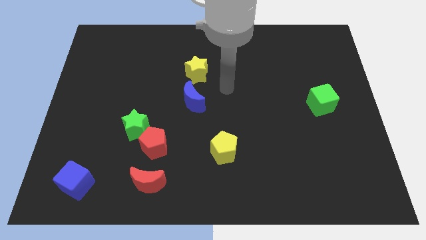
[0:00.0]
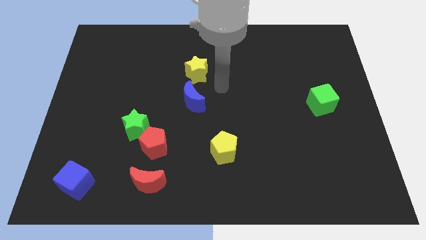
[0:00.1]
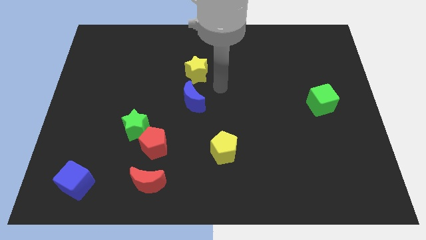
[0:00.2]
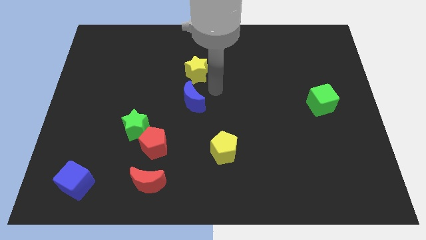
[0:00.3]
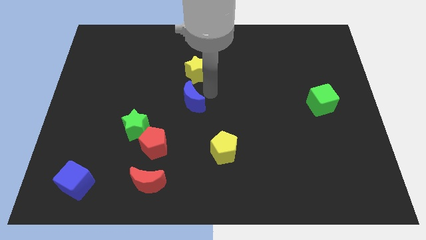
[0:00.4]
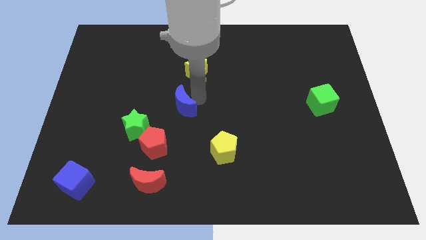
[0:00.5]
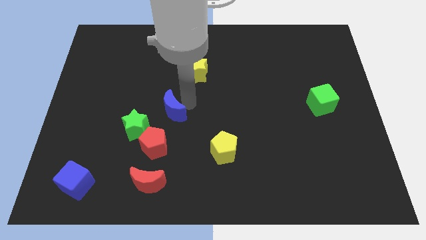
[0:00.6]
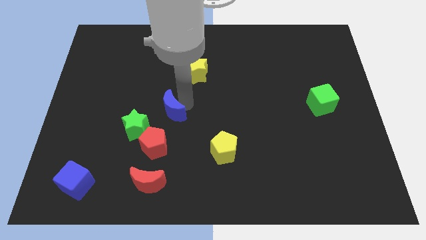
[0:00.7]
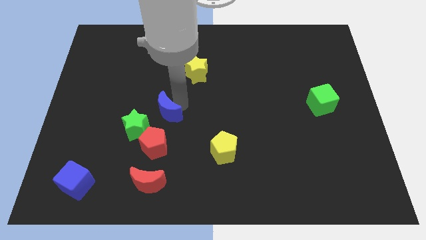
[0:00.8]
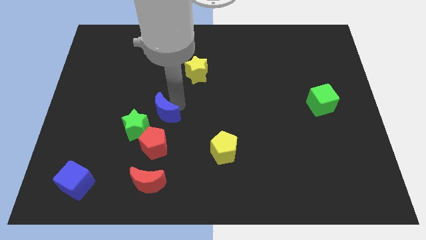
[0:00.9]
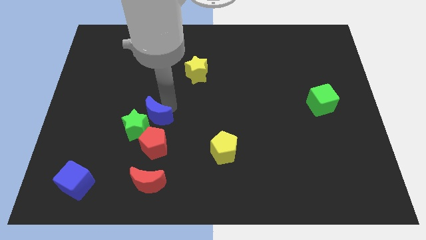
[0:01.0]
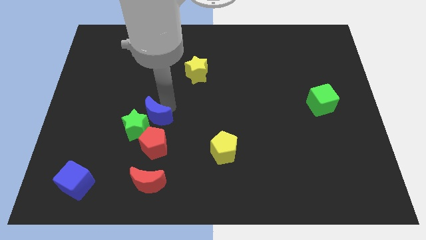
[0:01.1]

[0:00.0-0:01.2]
push the blue moon away from the yellow star

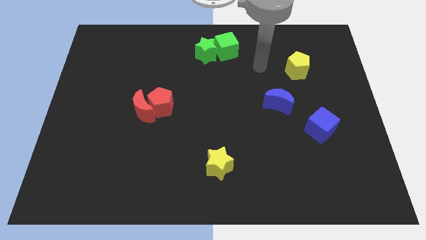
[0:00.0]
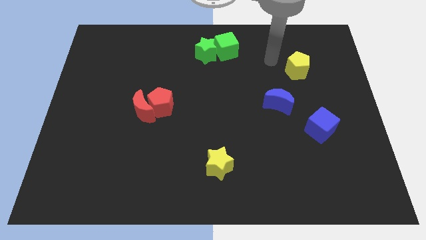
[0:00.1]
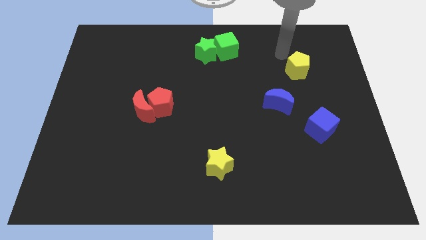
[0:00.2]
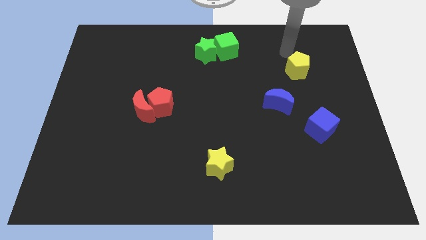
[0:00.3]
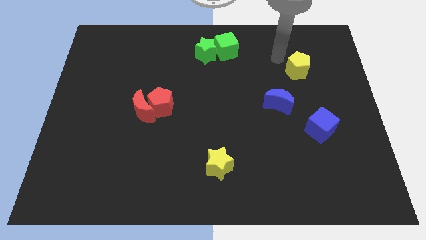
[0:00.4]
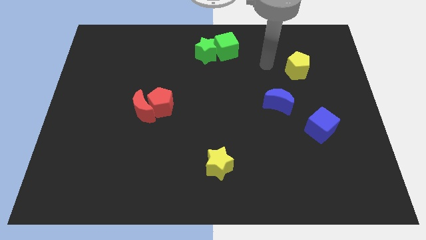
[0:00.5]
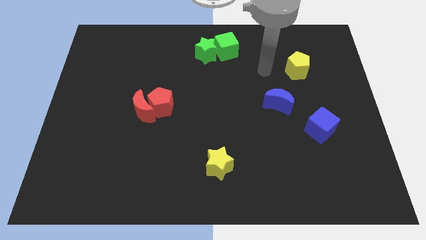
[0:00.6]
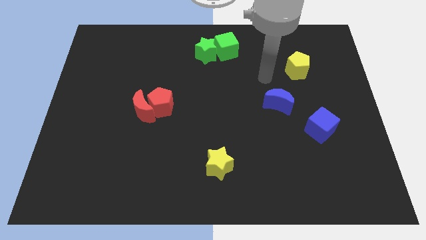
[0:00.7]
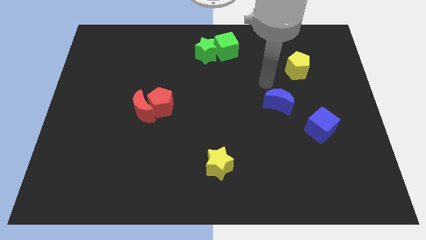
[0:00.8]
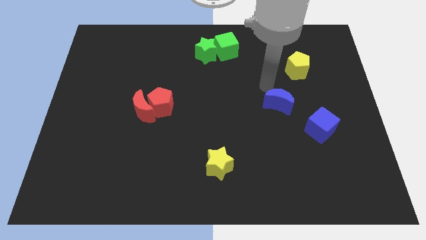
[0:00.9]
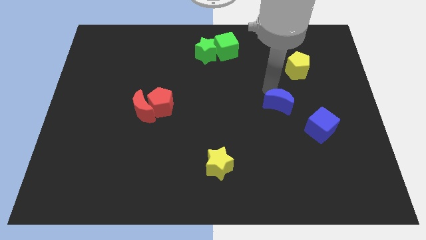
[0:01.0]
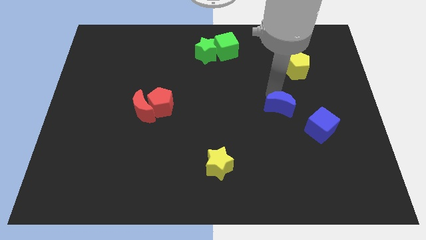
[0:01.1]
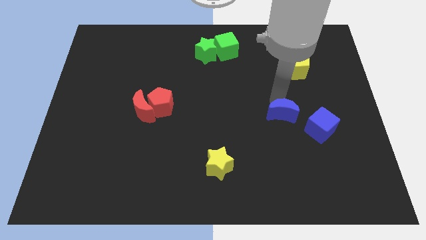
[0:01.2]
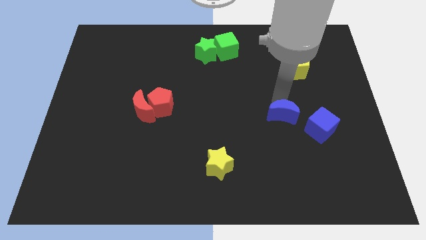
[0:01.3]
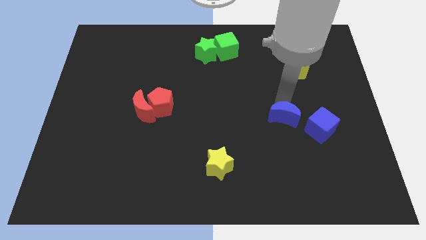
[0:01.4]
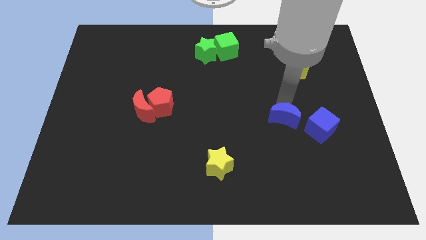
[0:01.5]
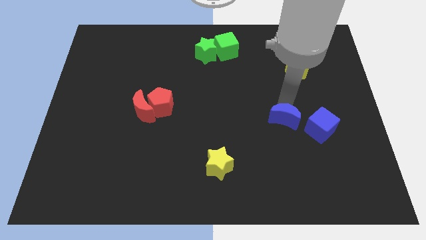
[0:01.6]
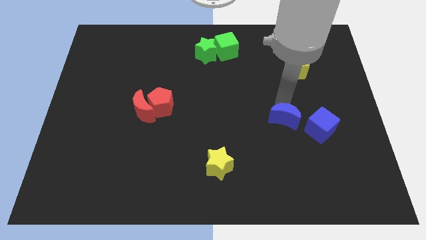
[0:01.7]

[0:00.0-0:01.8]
slightly push the blue moon towards bottom side

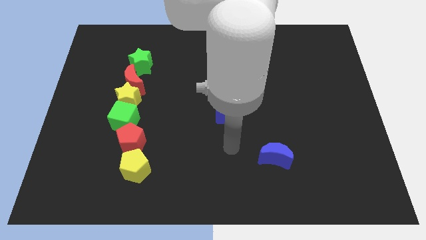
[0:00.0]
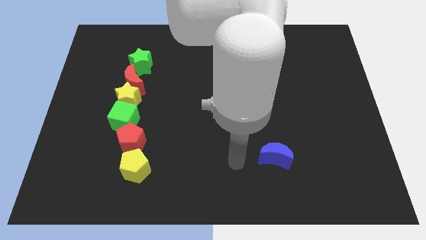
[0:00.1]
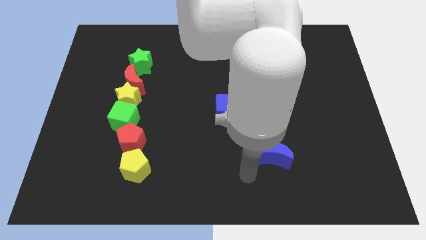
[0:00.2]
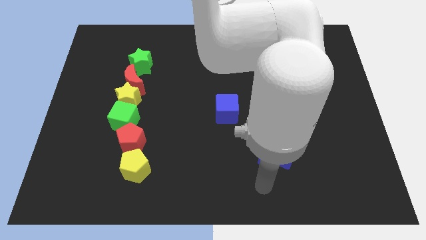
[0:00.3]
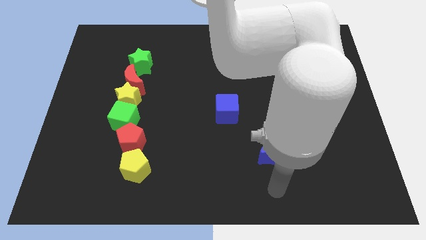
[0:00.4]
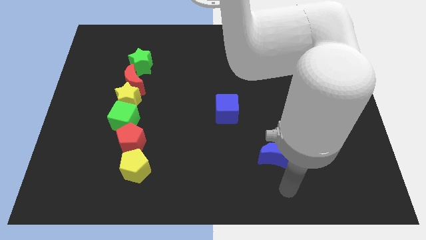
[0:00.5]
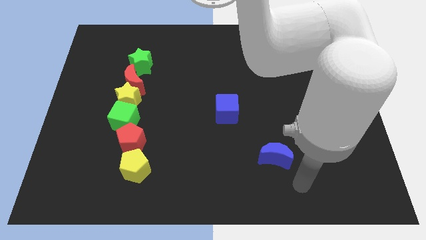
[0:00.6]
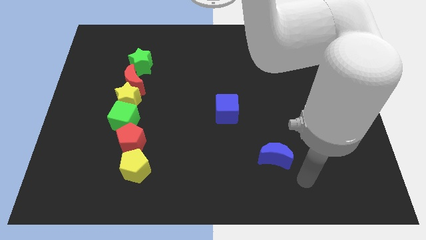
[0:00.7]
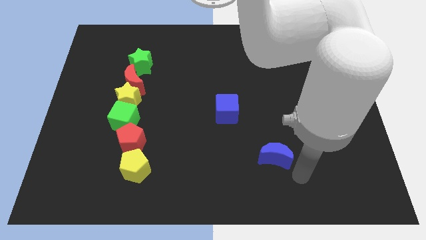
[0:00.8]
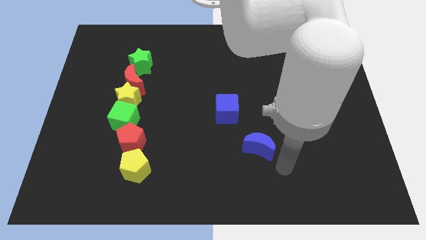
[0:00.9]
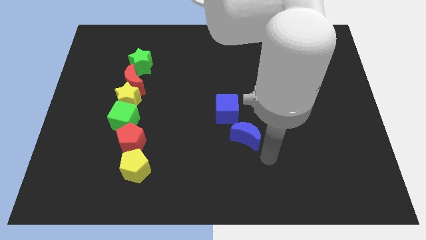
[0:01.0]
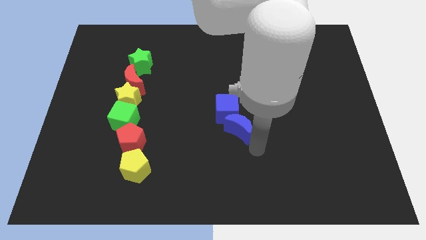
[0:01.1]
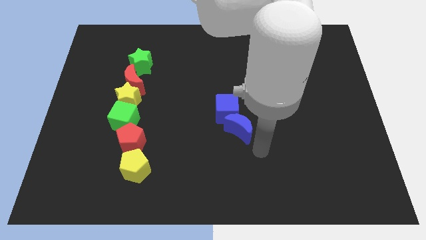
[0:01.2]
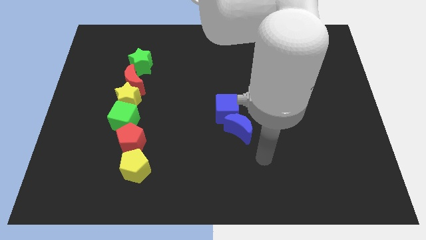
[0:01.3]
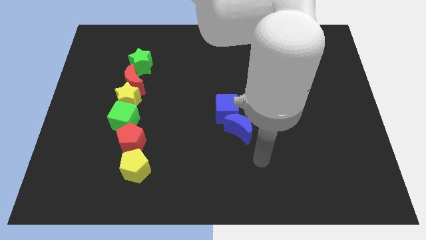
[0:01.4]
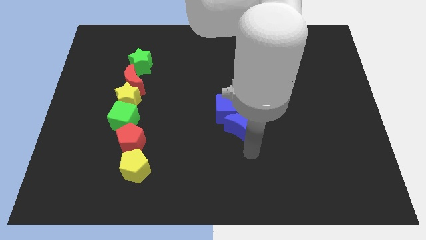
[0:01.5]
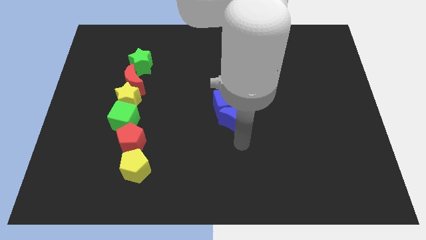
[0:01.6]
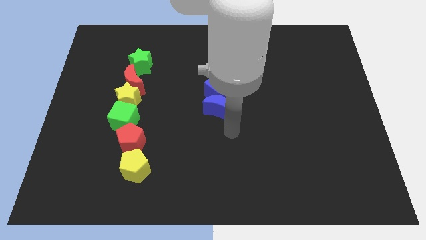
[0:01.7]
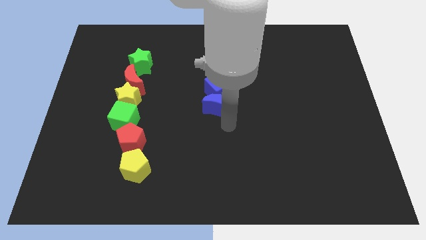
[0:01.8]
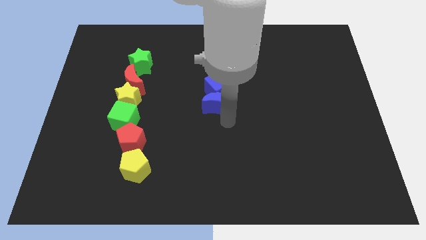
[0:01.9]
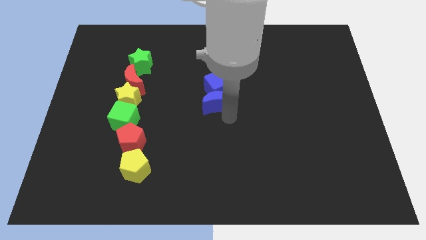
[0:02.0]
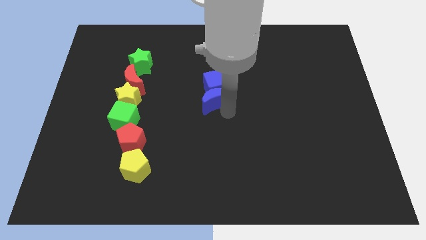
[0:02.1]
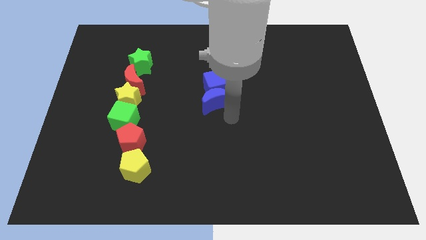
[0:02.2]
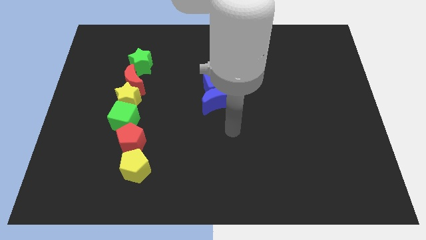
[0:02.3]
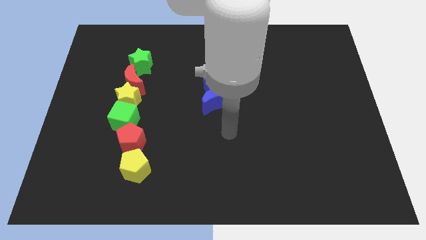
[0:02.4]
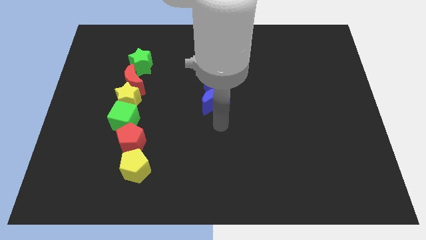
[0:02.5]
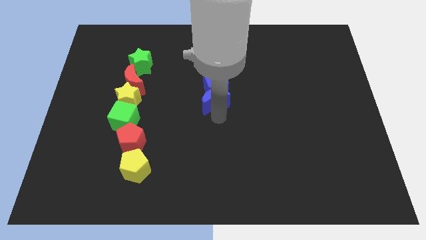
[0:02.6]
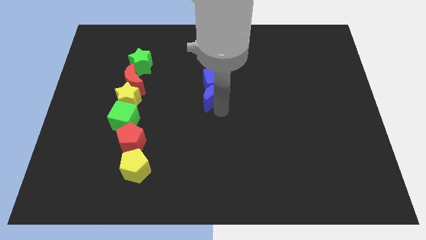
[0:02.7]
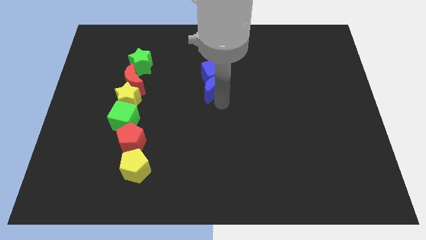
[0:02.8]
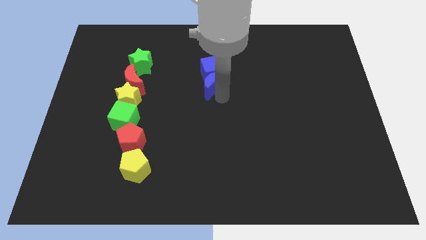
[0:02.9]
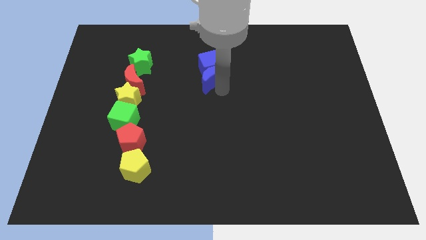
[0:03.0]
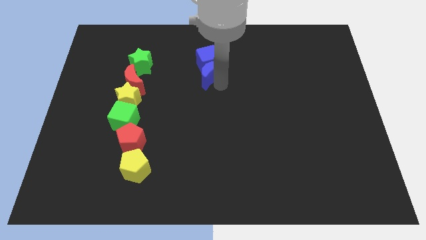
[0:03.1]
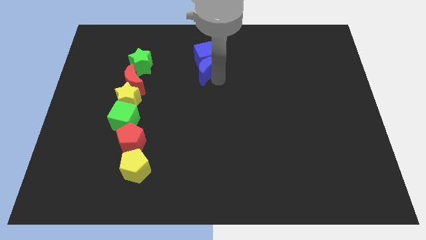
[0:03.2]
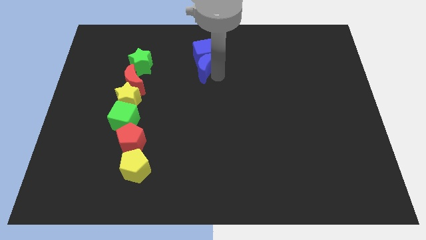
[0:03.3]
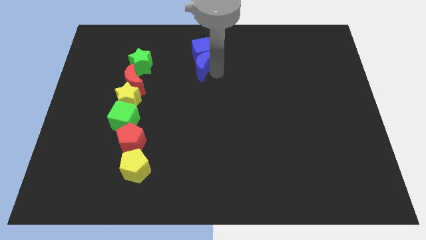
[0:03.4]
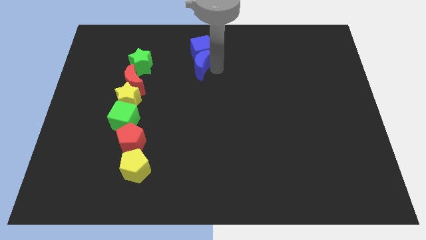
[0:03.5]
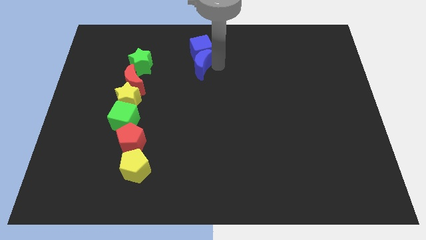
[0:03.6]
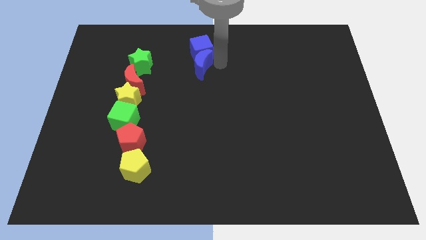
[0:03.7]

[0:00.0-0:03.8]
push the blue blocks towards the top center

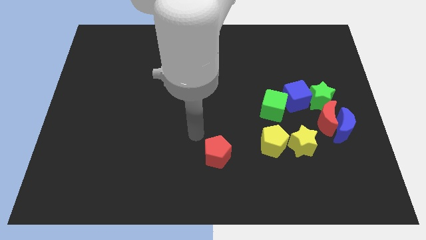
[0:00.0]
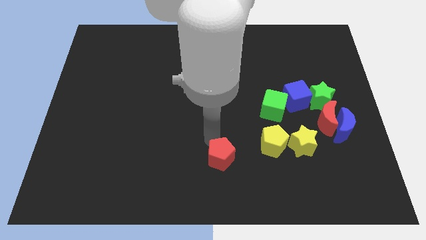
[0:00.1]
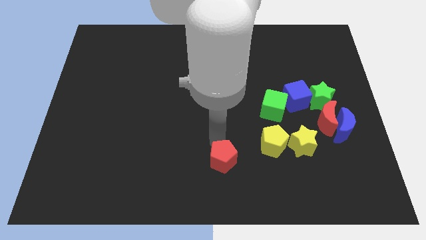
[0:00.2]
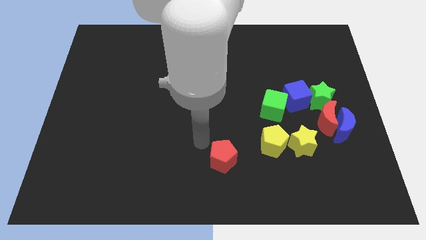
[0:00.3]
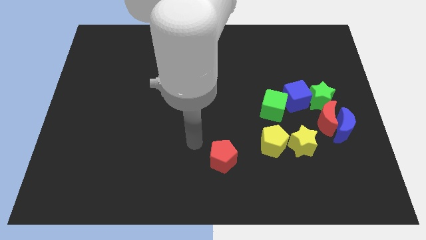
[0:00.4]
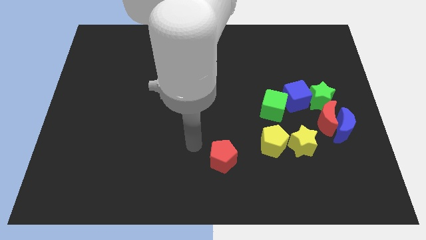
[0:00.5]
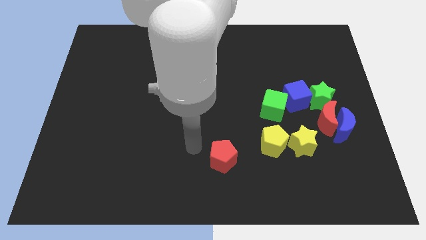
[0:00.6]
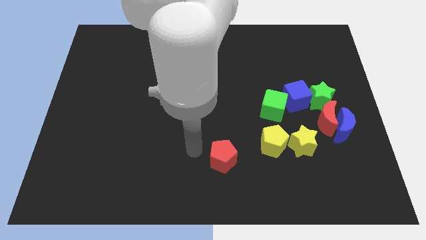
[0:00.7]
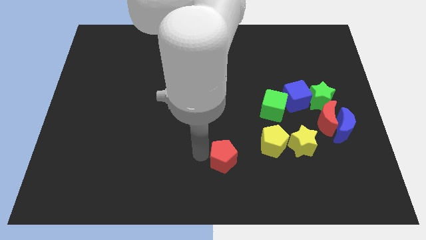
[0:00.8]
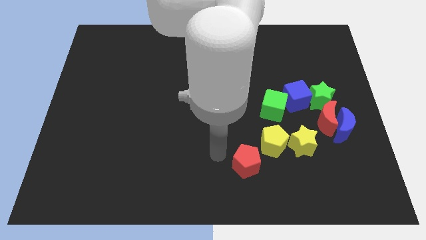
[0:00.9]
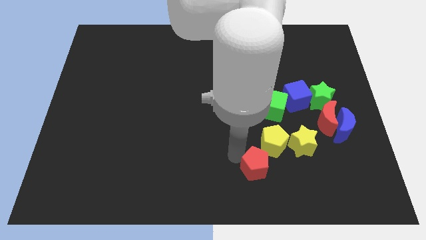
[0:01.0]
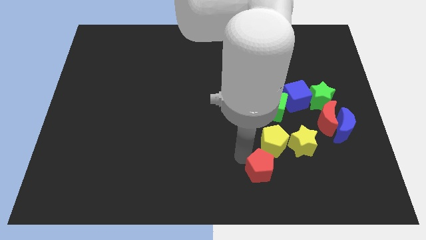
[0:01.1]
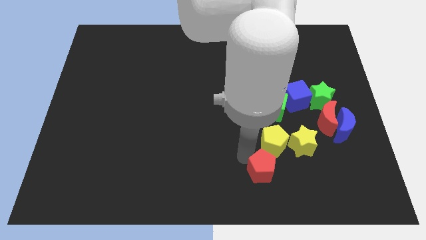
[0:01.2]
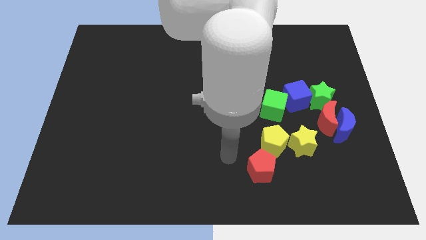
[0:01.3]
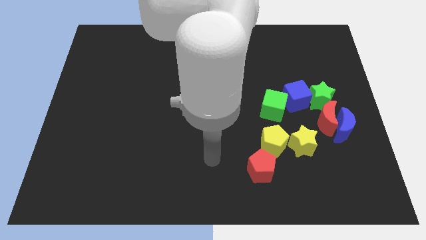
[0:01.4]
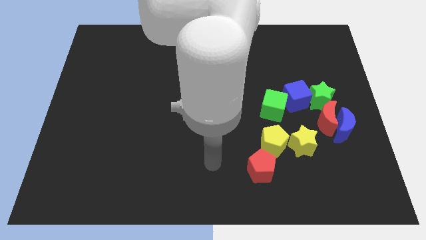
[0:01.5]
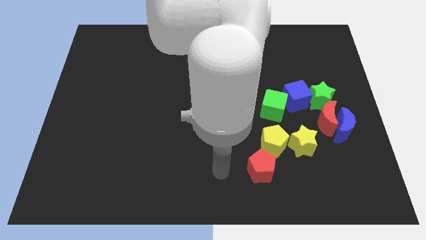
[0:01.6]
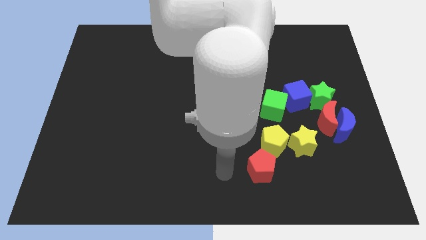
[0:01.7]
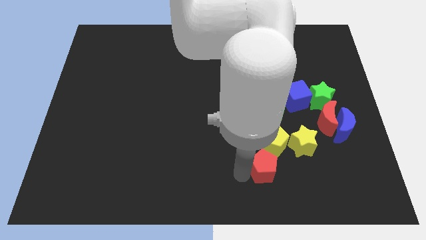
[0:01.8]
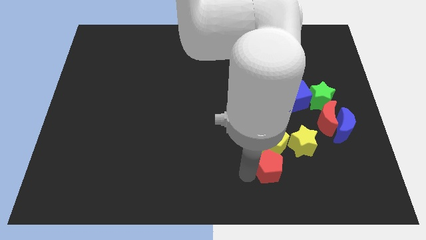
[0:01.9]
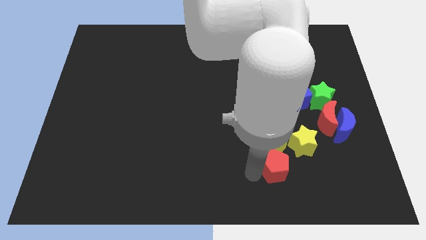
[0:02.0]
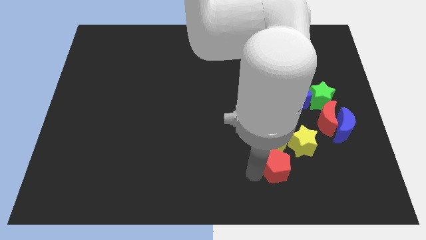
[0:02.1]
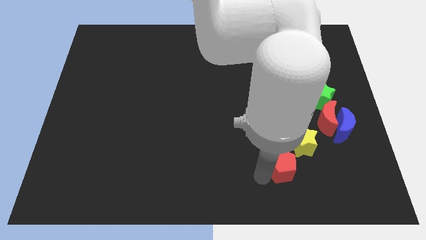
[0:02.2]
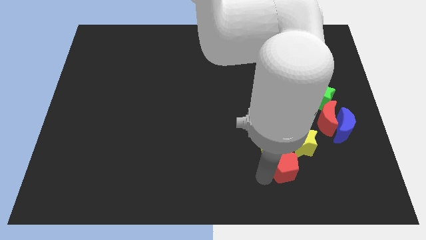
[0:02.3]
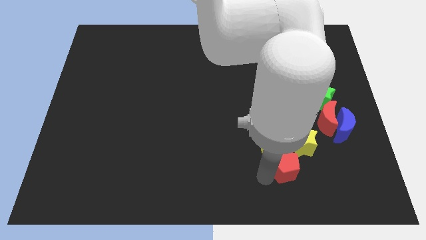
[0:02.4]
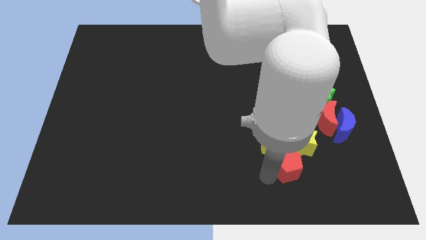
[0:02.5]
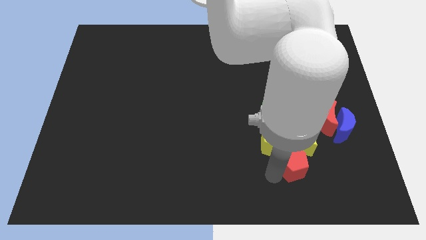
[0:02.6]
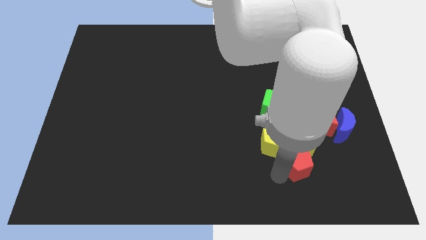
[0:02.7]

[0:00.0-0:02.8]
place red pentagon below yellow star
